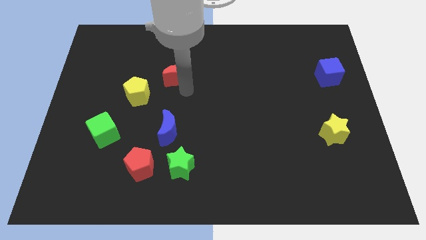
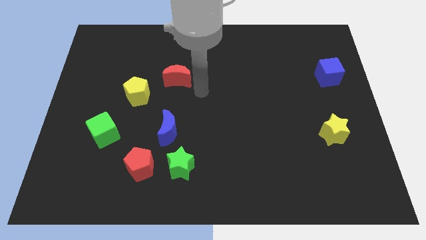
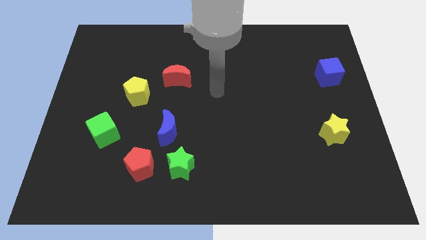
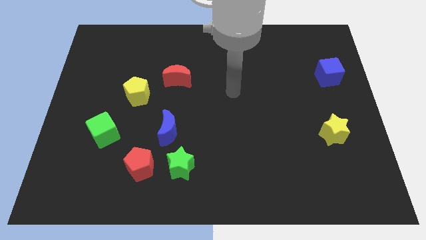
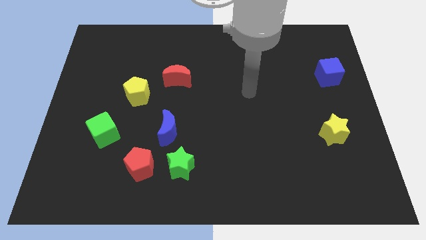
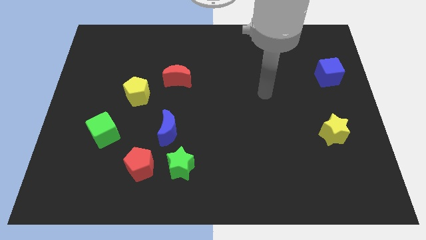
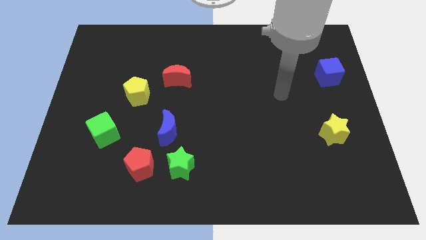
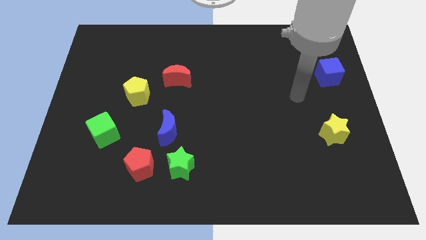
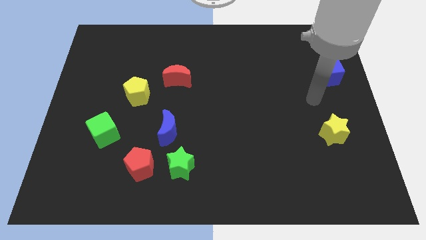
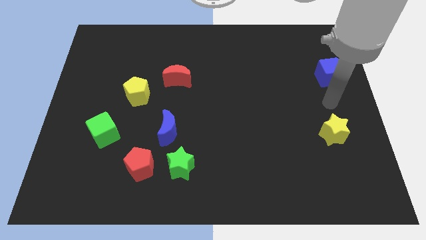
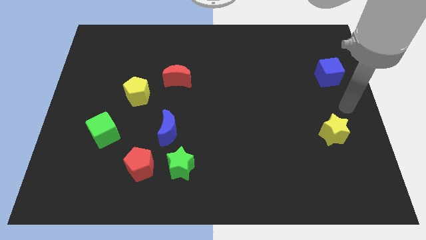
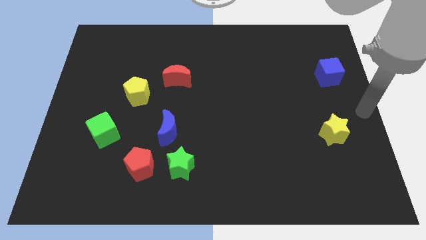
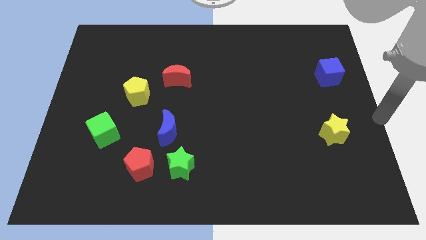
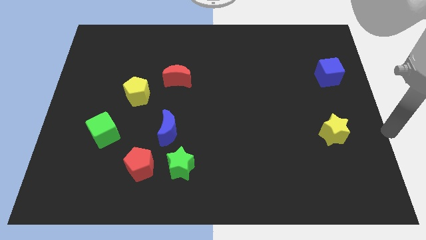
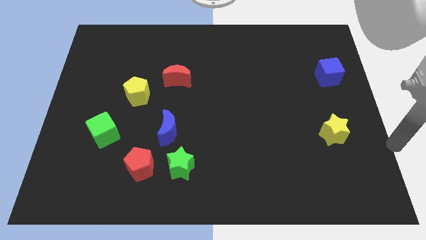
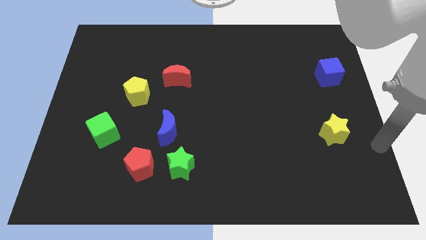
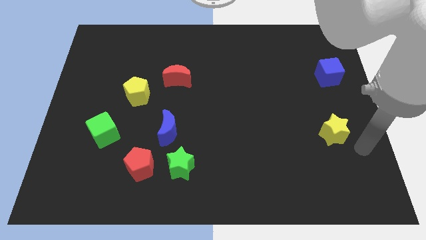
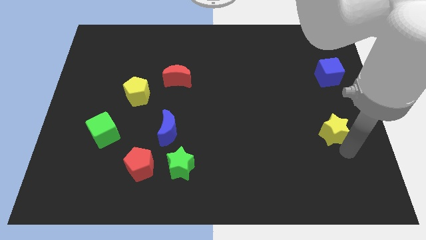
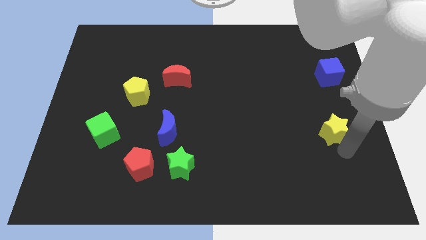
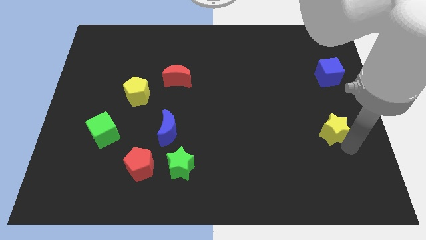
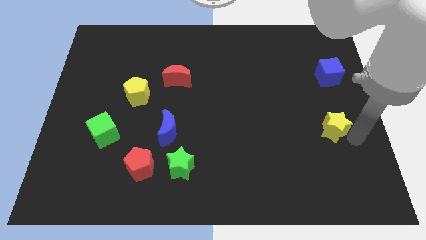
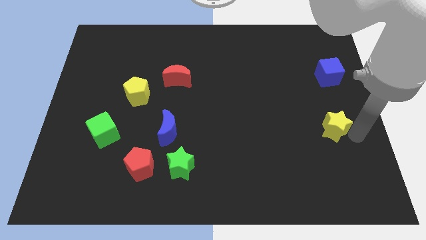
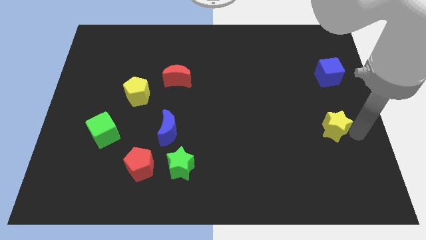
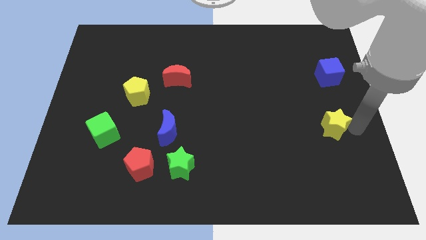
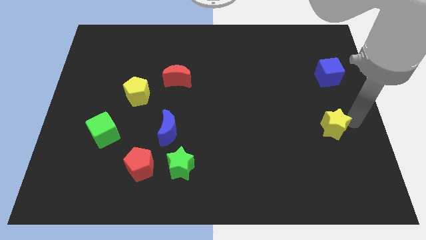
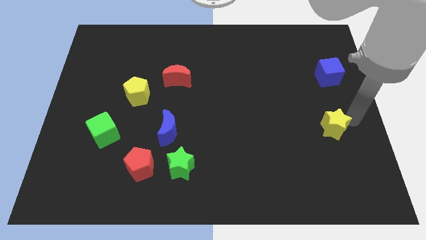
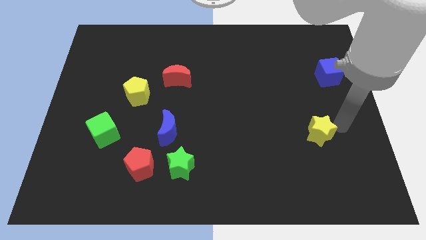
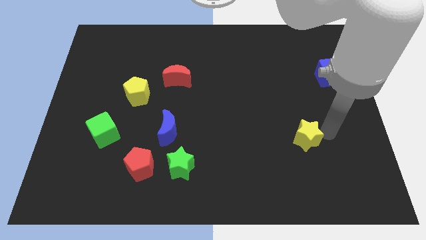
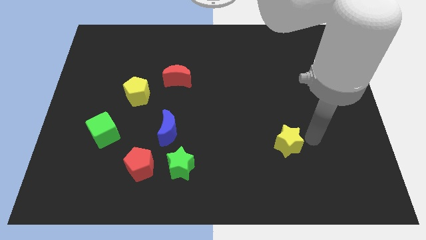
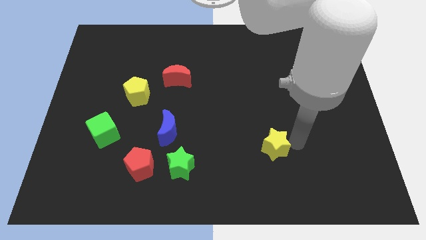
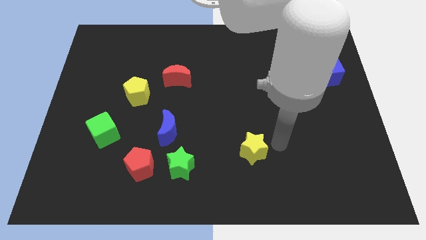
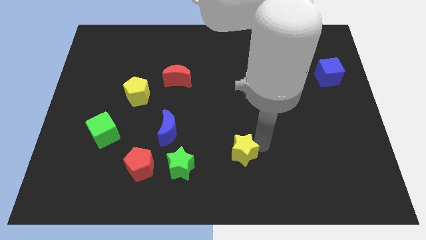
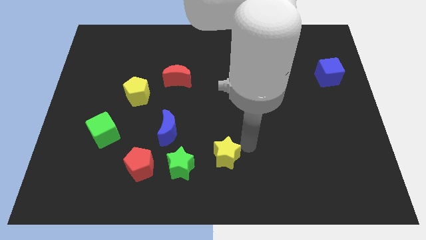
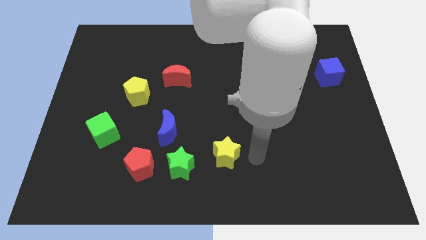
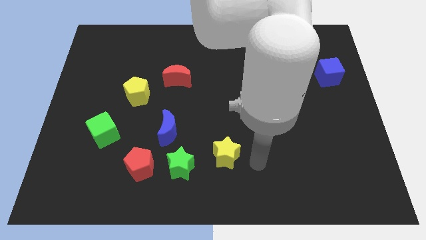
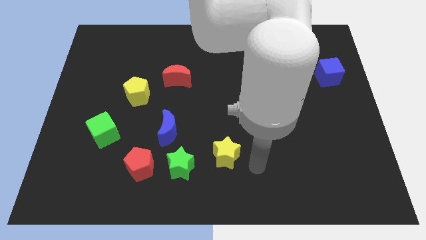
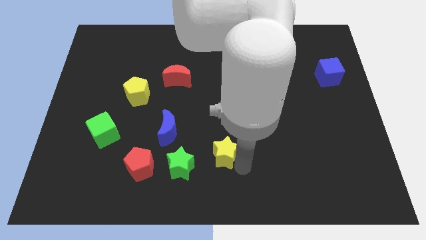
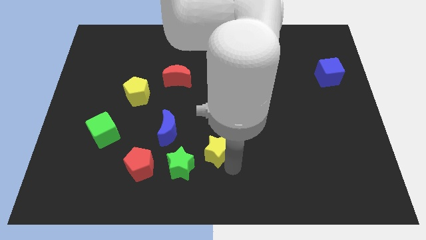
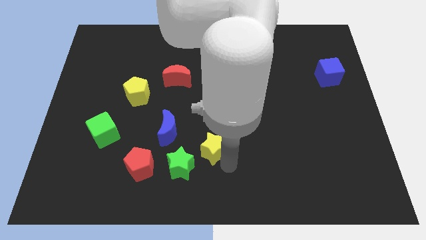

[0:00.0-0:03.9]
put the yellow star diagonally bottom left of the blue cube

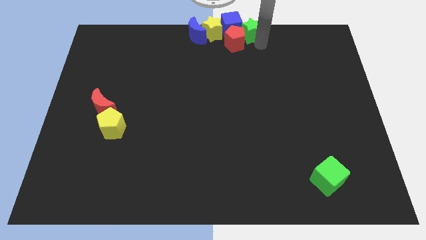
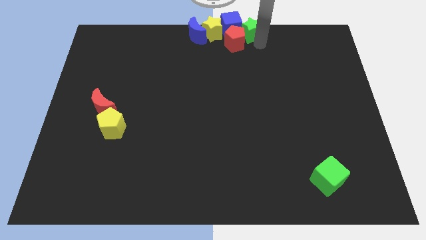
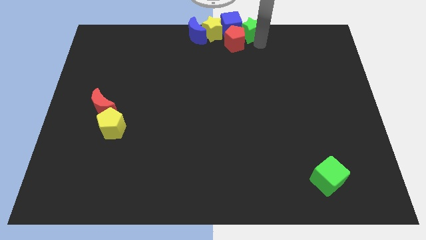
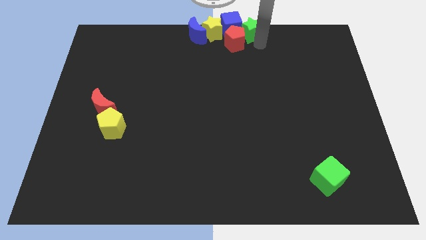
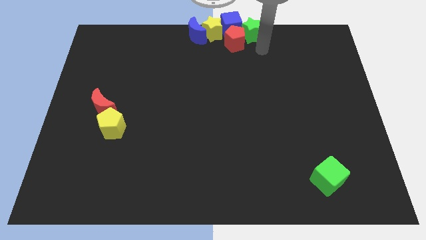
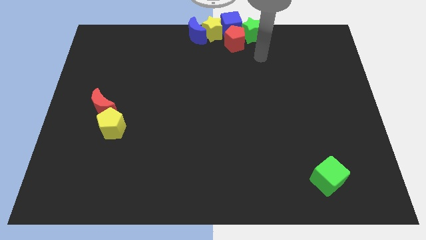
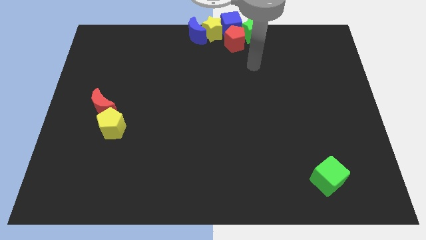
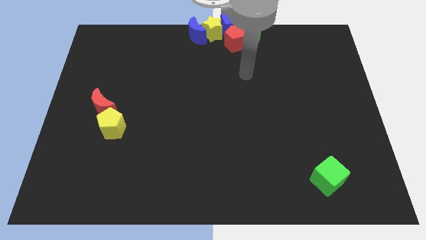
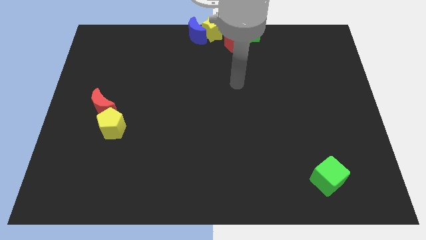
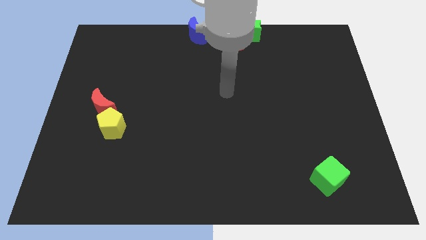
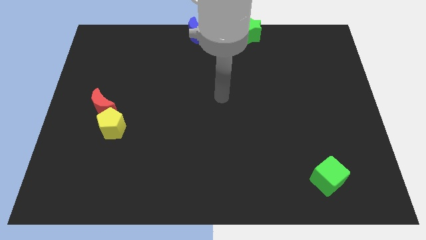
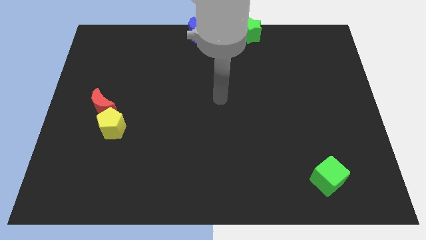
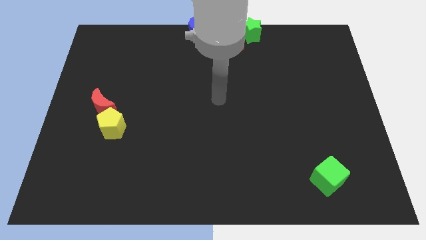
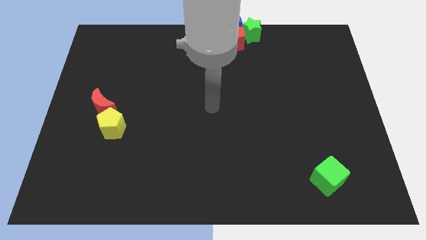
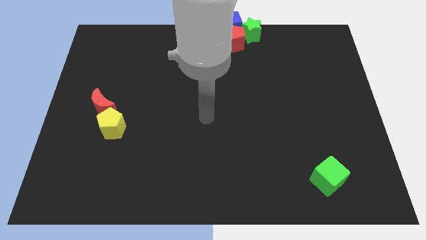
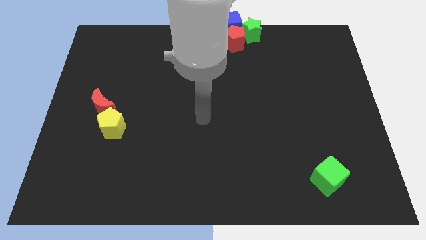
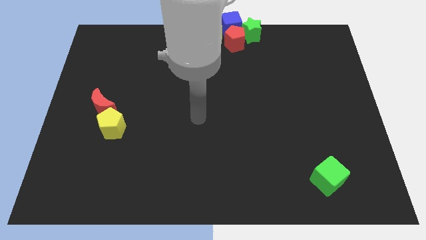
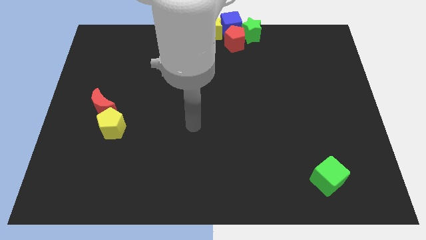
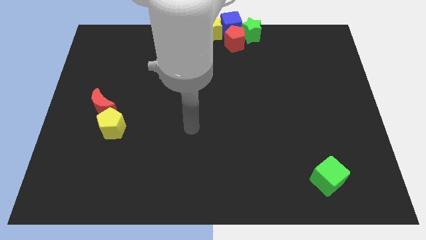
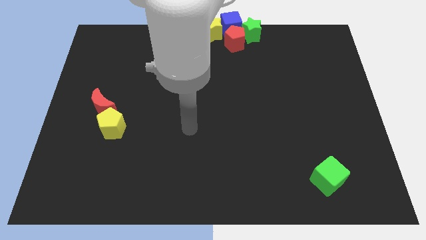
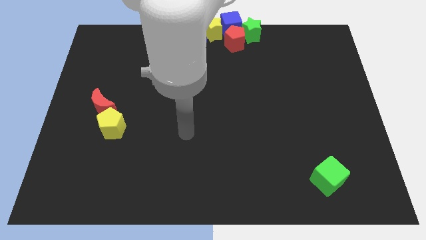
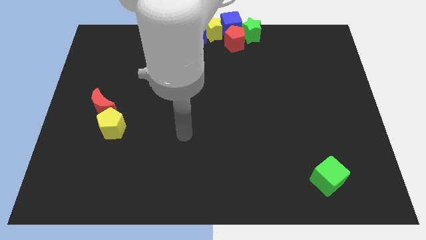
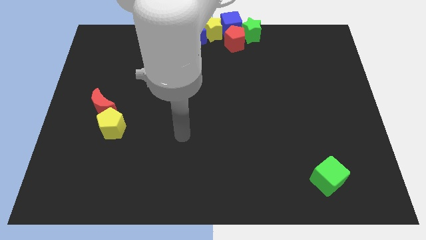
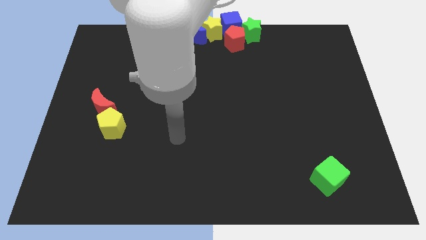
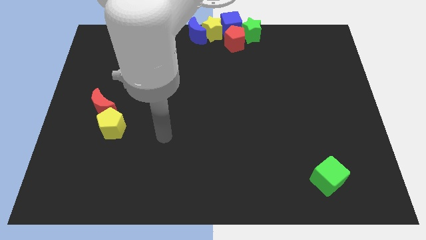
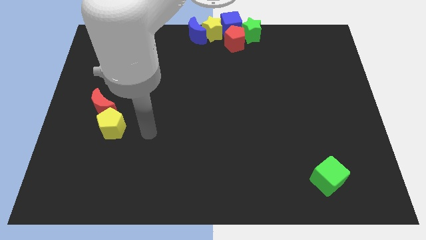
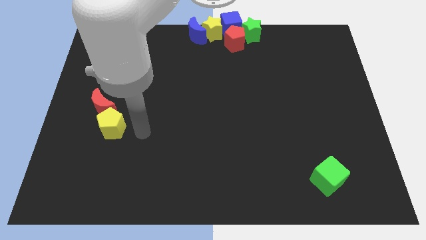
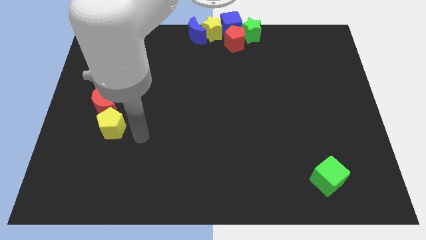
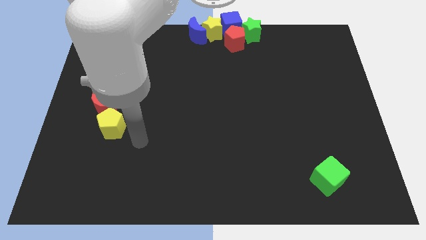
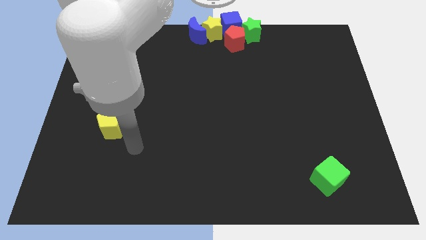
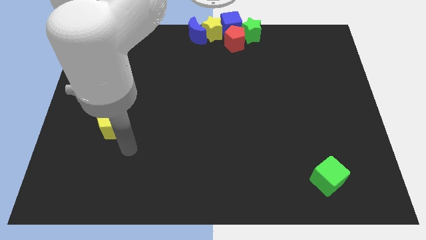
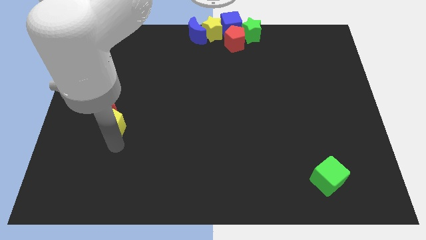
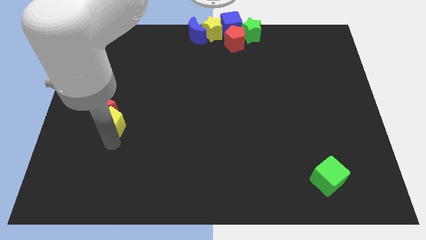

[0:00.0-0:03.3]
move your arm to the bottom of the yellow pentagon

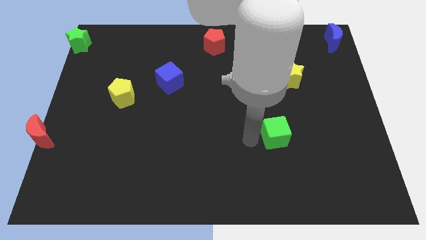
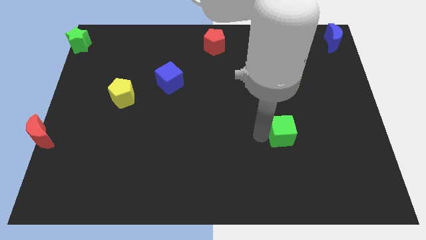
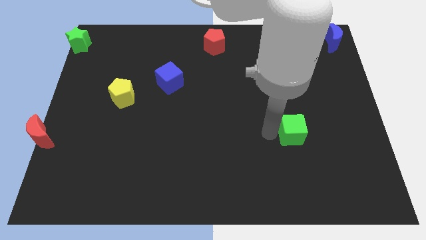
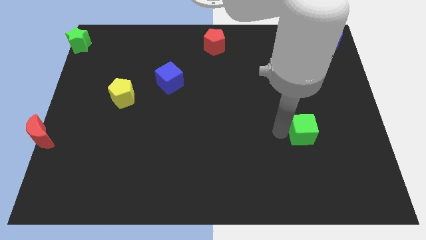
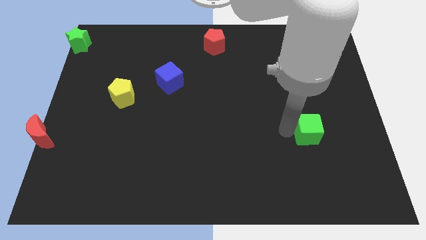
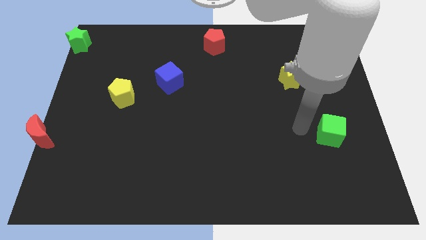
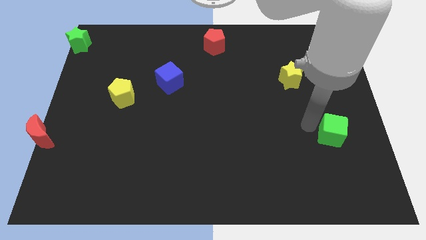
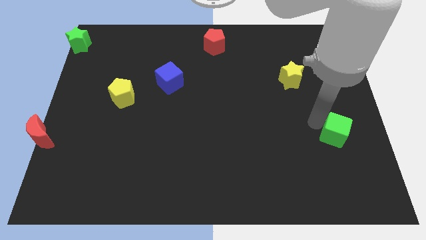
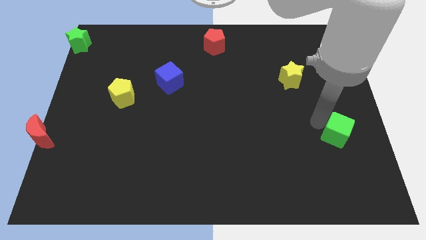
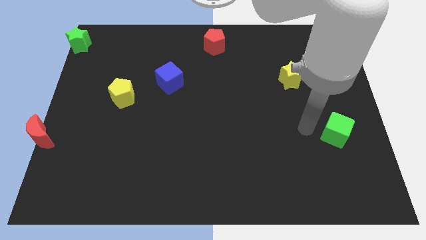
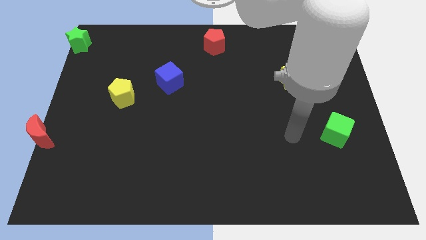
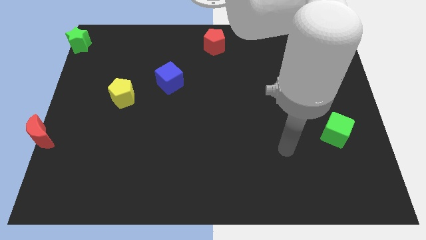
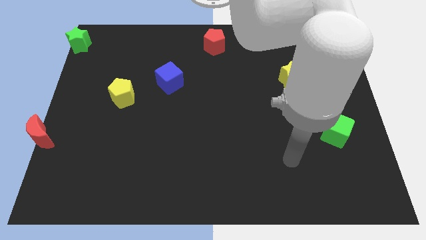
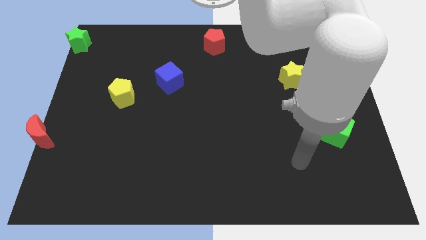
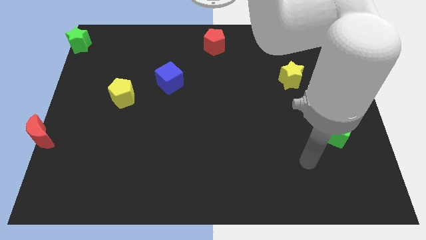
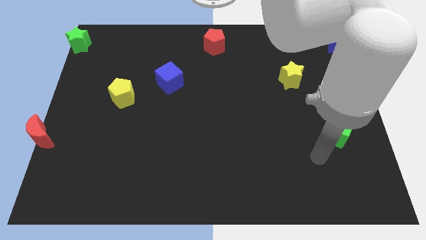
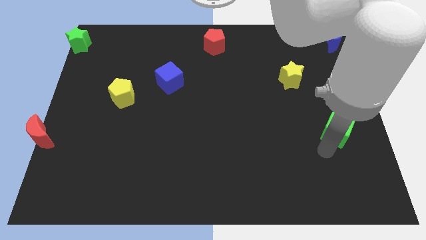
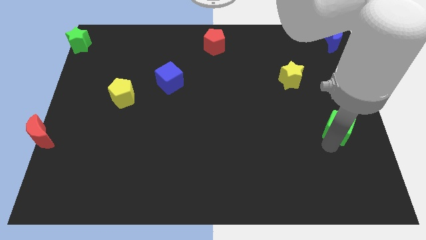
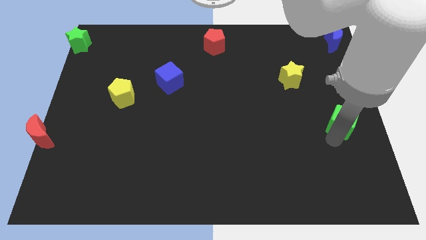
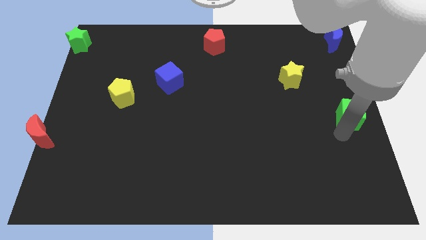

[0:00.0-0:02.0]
move green cube towards the right center of the board
